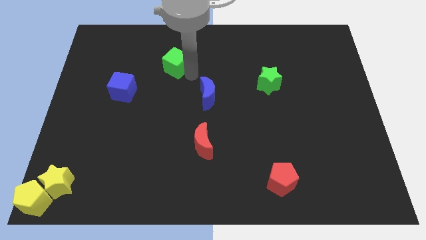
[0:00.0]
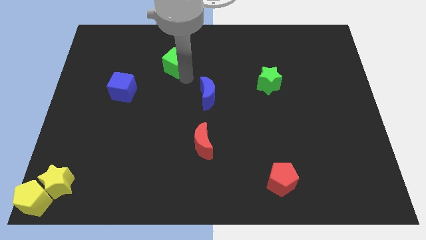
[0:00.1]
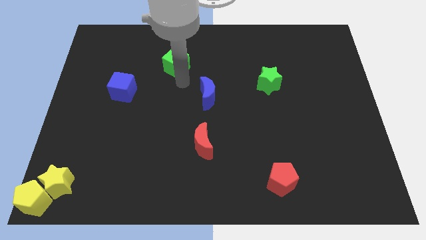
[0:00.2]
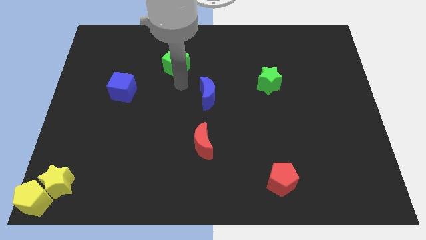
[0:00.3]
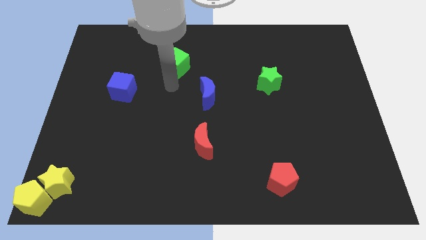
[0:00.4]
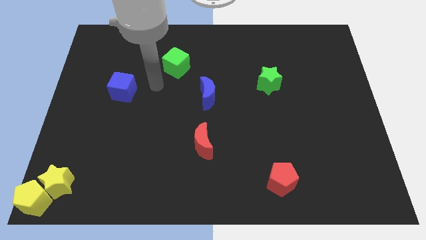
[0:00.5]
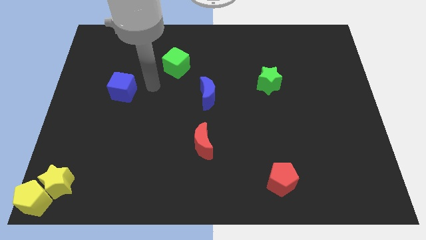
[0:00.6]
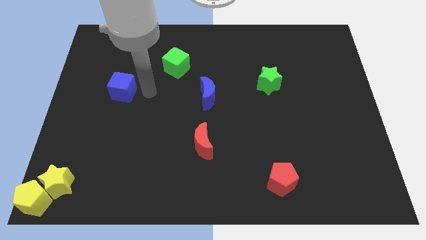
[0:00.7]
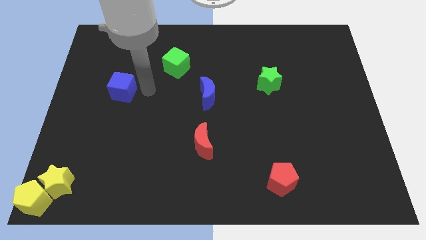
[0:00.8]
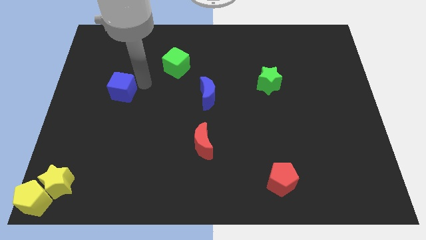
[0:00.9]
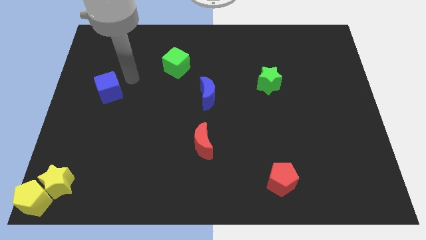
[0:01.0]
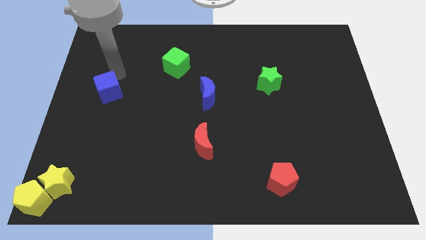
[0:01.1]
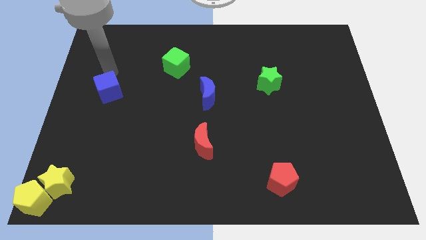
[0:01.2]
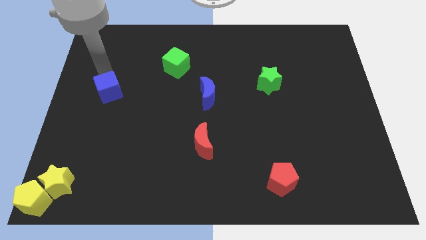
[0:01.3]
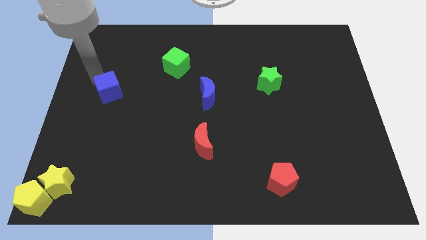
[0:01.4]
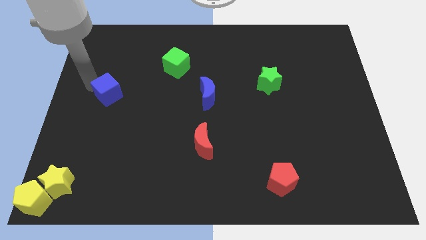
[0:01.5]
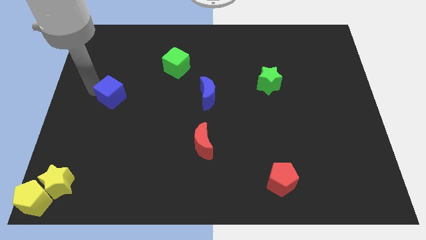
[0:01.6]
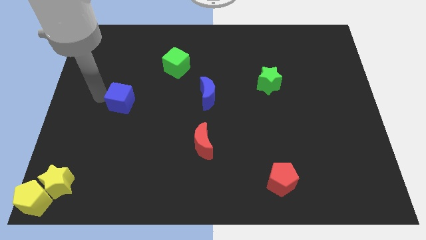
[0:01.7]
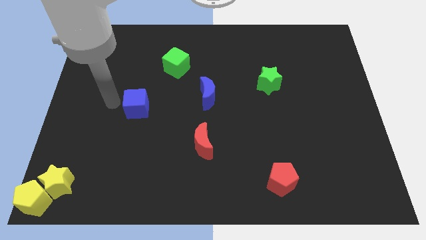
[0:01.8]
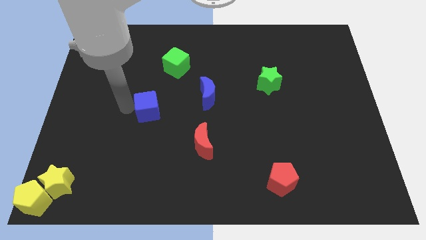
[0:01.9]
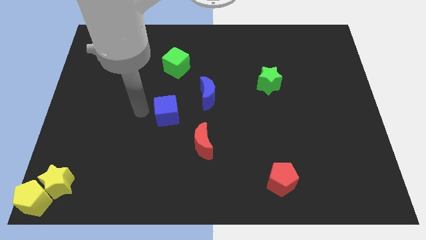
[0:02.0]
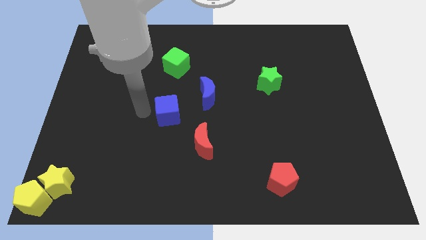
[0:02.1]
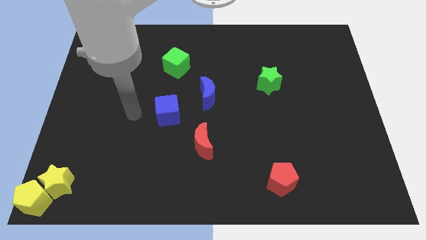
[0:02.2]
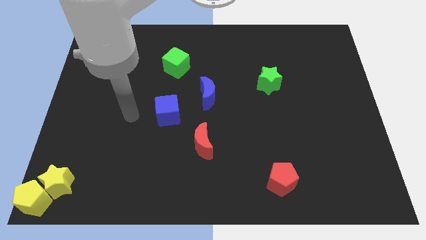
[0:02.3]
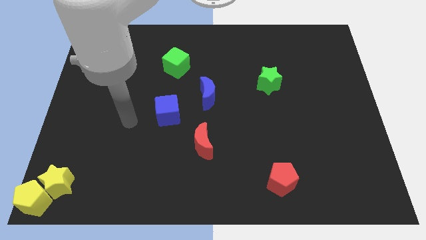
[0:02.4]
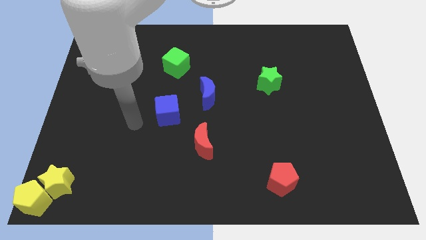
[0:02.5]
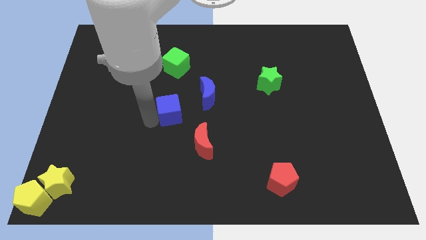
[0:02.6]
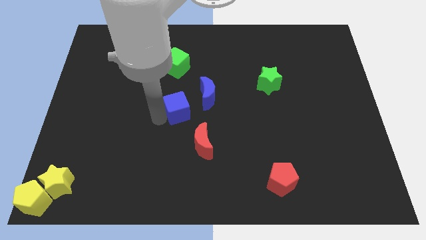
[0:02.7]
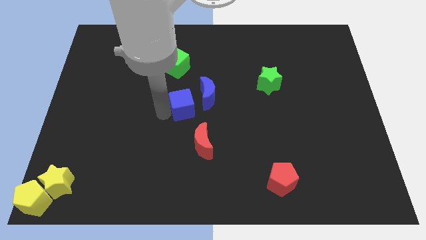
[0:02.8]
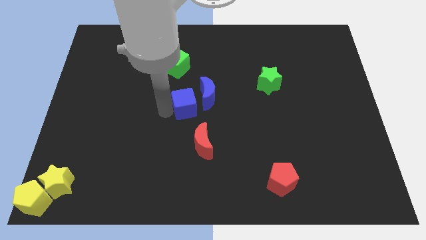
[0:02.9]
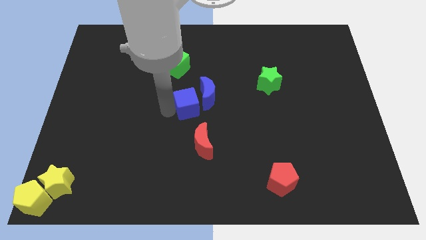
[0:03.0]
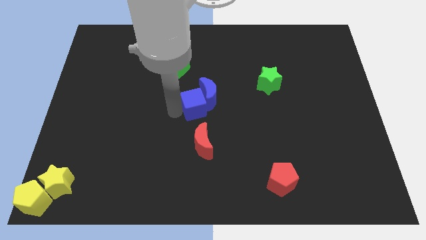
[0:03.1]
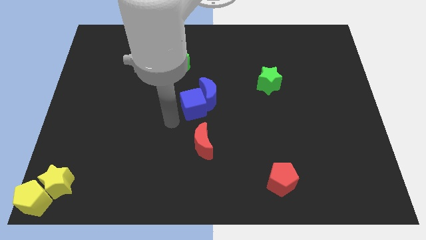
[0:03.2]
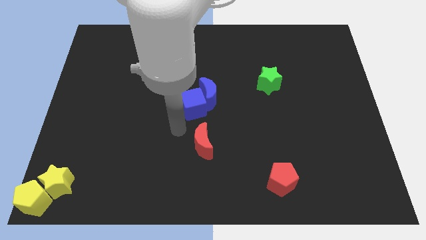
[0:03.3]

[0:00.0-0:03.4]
push the blue cube into the blue crescent

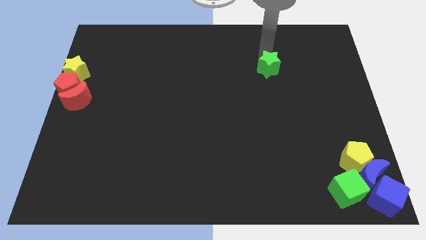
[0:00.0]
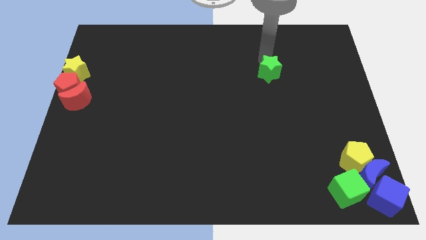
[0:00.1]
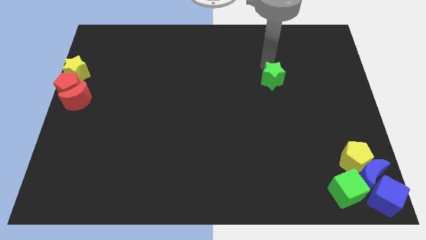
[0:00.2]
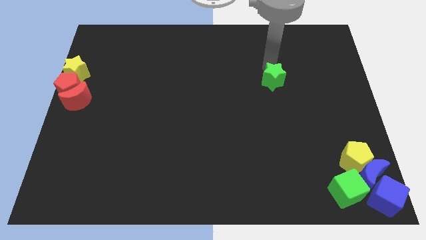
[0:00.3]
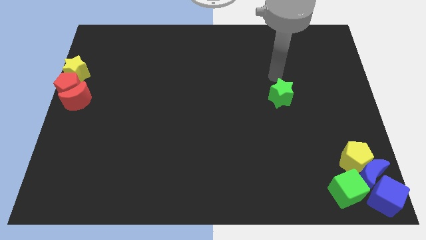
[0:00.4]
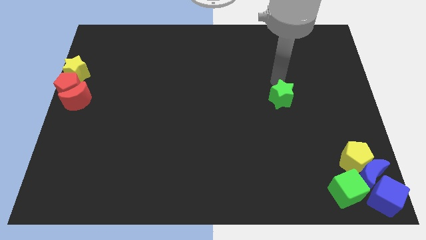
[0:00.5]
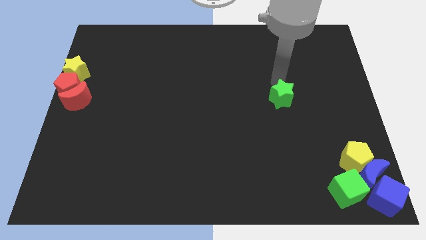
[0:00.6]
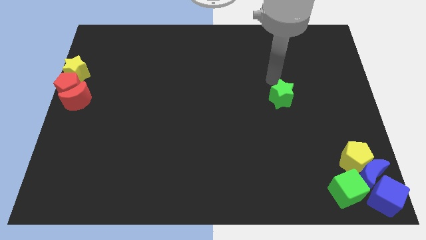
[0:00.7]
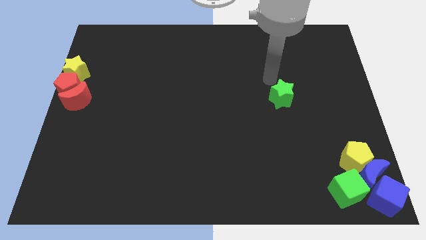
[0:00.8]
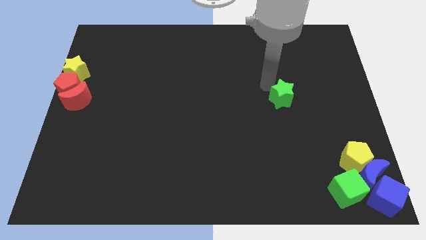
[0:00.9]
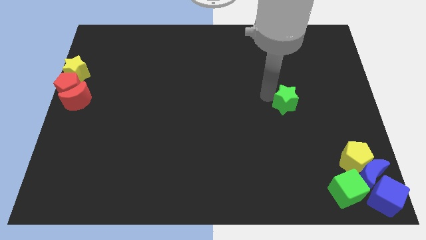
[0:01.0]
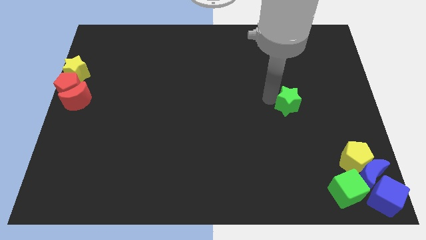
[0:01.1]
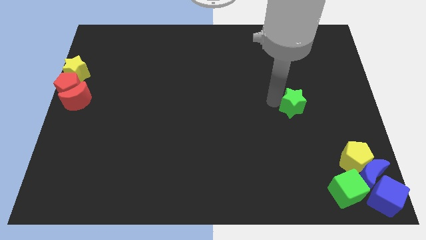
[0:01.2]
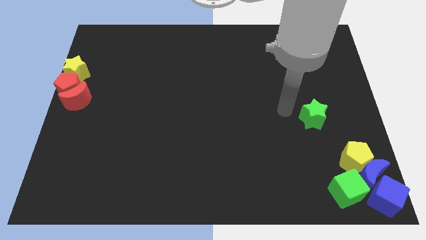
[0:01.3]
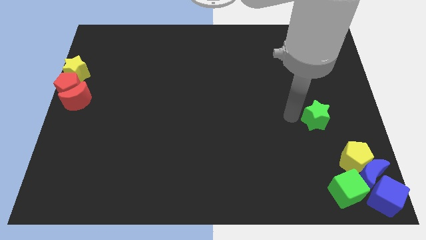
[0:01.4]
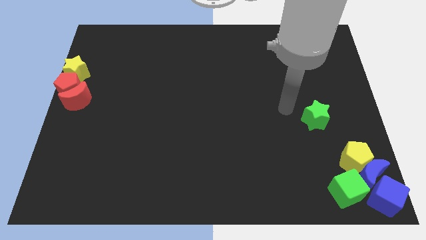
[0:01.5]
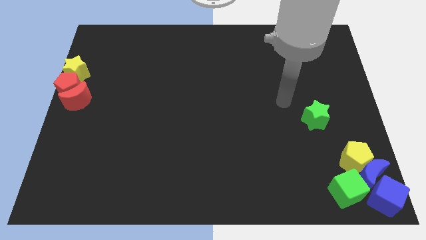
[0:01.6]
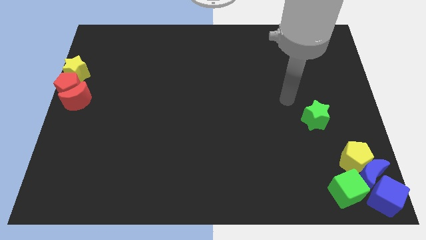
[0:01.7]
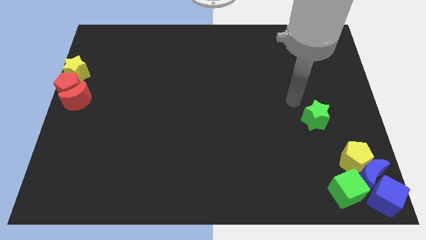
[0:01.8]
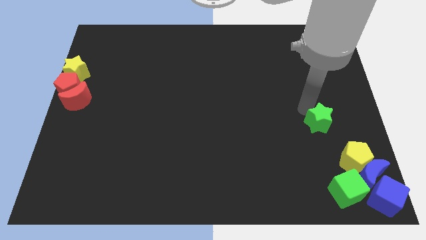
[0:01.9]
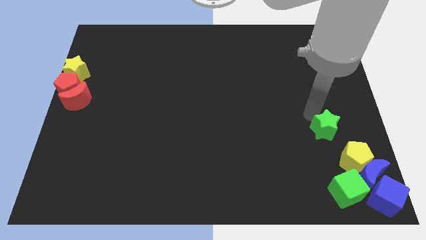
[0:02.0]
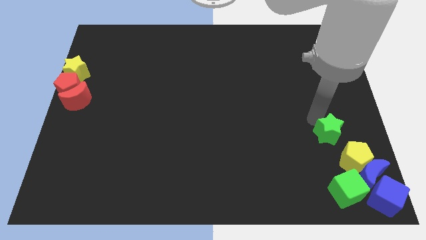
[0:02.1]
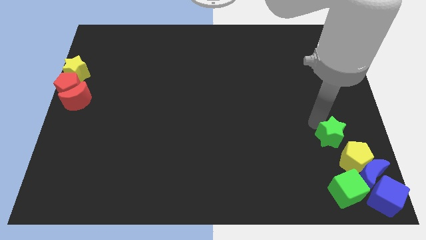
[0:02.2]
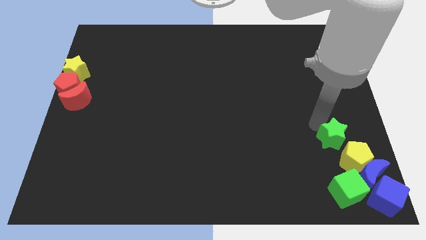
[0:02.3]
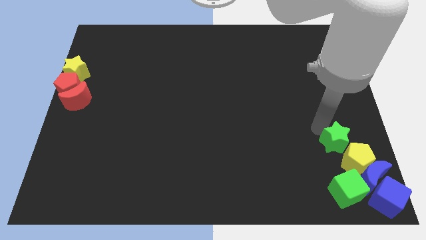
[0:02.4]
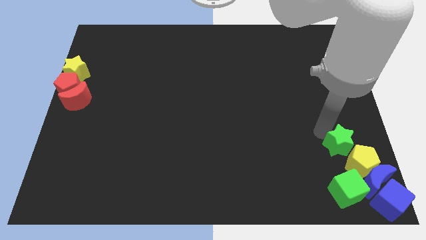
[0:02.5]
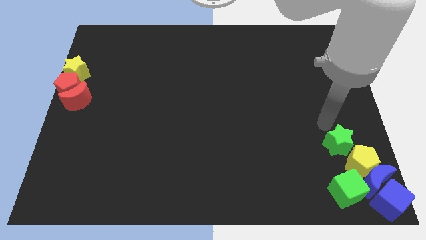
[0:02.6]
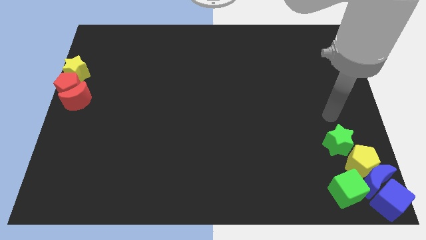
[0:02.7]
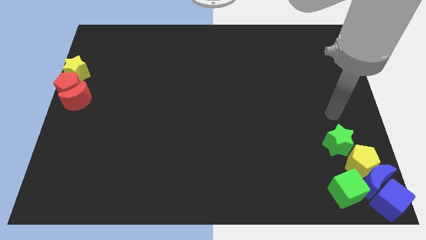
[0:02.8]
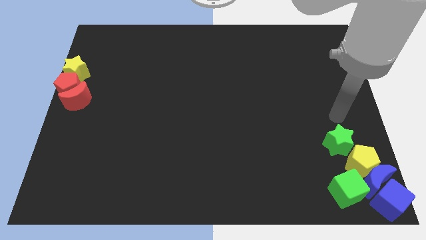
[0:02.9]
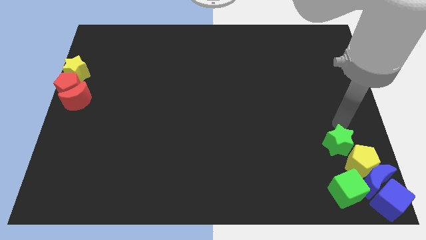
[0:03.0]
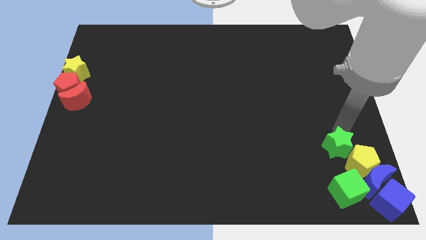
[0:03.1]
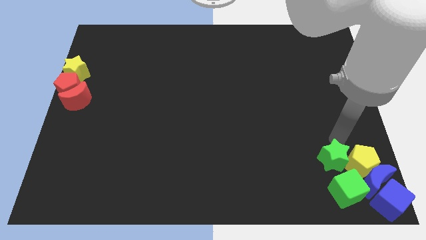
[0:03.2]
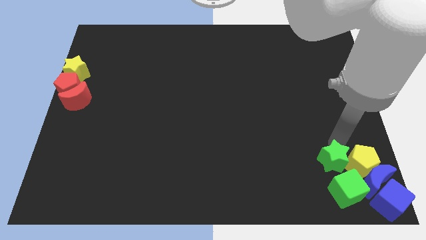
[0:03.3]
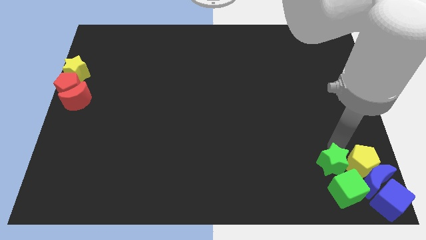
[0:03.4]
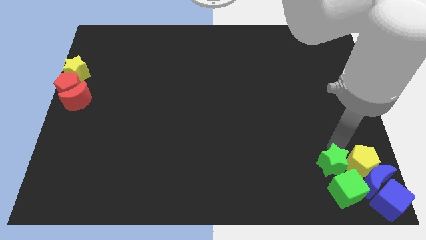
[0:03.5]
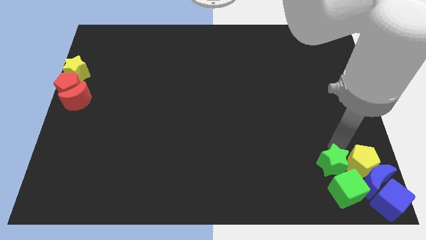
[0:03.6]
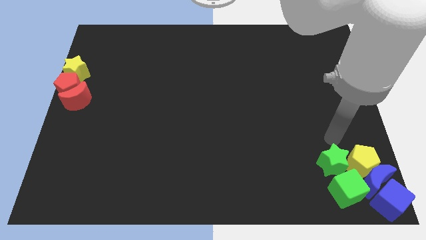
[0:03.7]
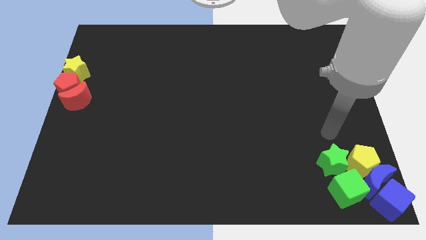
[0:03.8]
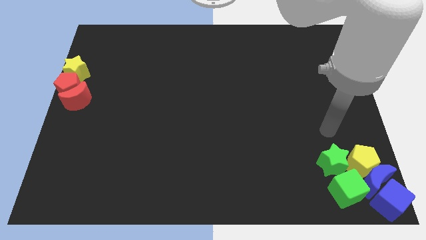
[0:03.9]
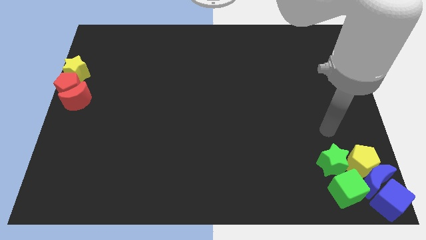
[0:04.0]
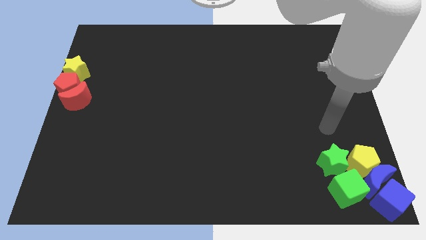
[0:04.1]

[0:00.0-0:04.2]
place the green star above the green cube

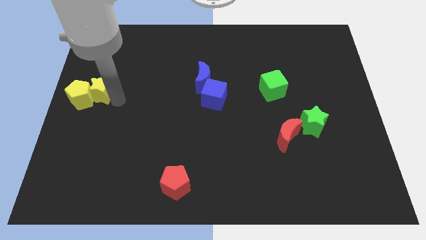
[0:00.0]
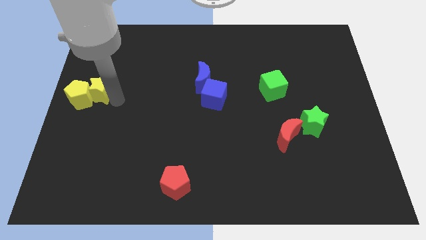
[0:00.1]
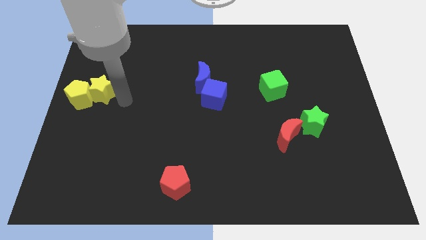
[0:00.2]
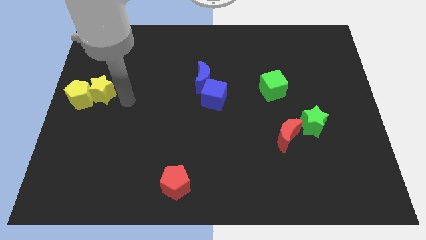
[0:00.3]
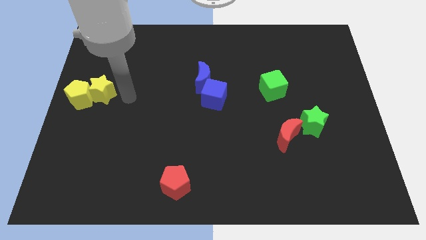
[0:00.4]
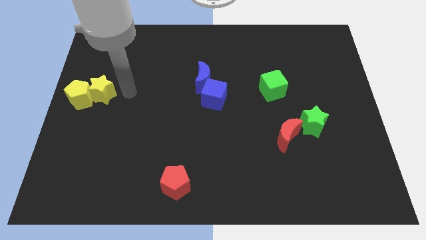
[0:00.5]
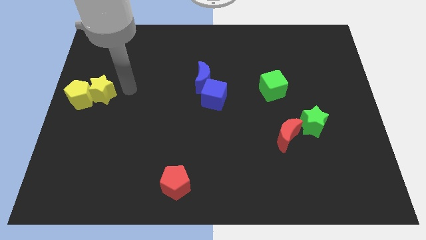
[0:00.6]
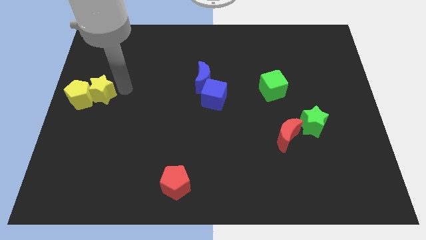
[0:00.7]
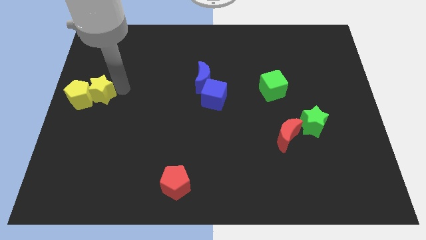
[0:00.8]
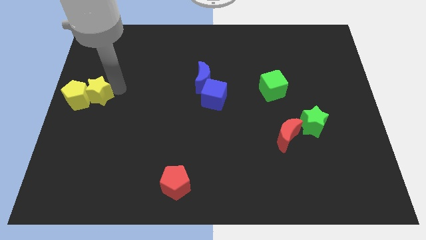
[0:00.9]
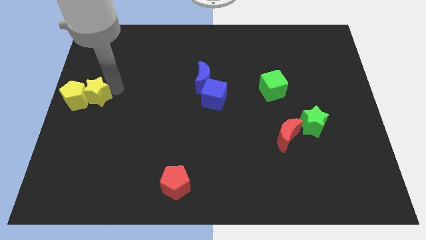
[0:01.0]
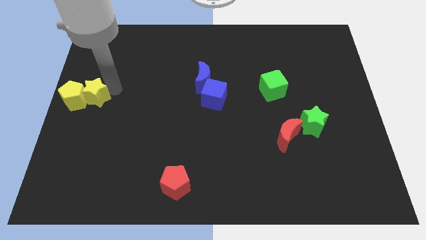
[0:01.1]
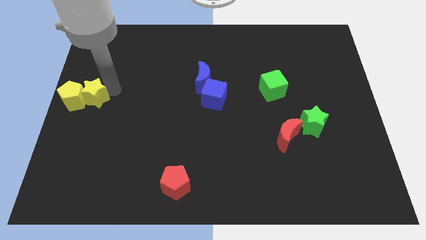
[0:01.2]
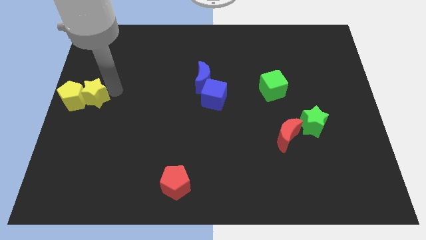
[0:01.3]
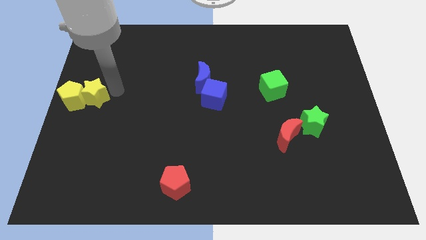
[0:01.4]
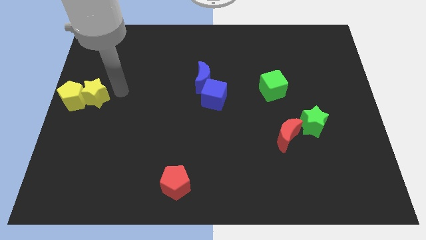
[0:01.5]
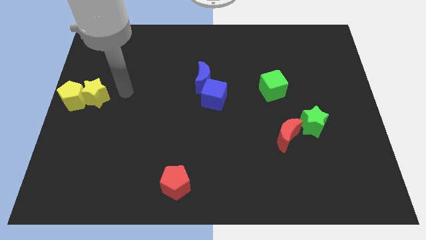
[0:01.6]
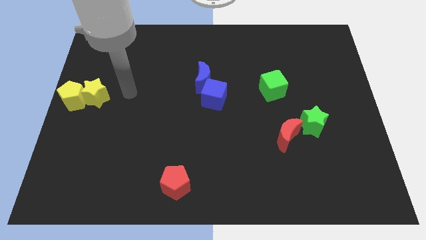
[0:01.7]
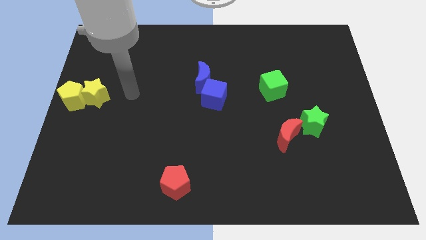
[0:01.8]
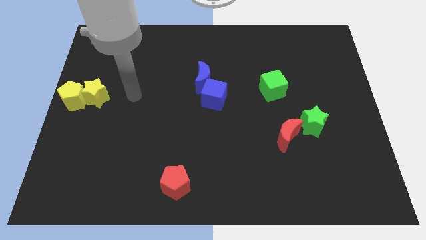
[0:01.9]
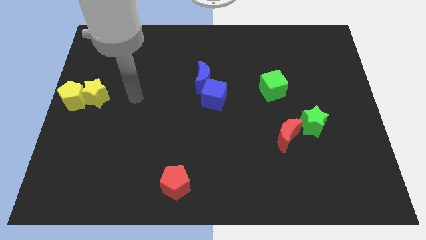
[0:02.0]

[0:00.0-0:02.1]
push the yellow star and yellow pentagon towards the center left of the board
